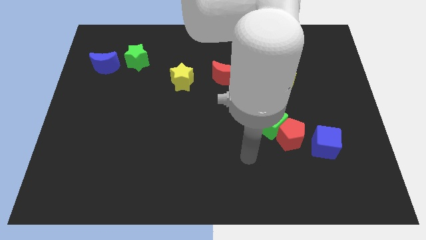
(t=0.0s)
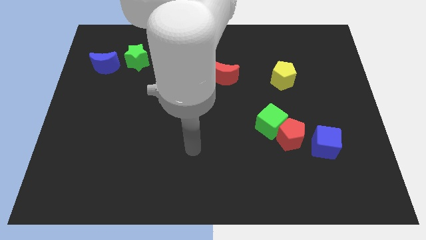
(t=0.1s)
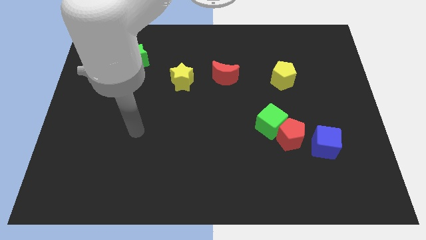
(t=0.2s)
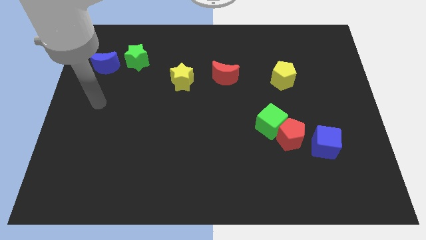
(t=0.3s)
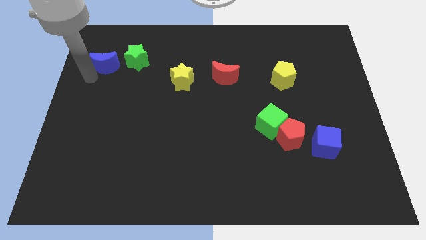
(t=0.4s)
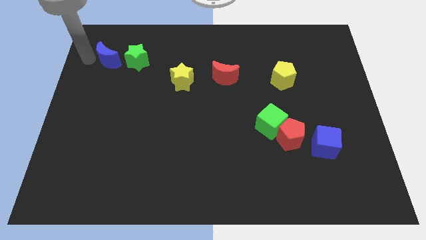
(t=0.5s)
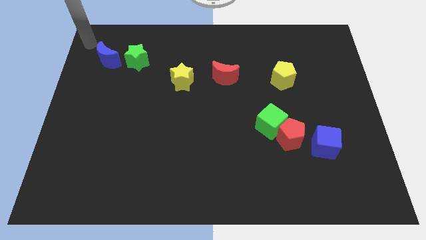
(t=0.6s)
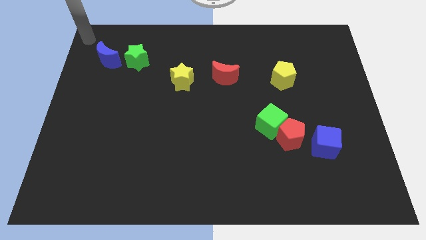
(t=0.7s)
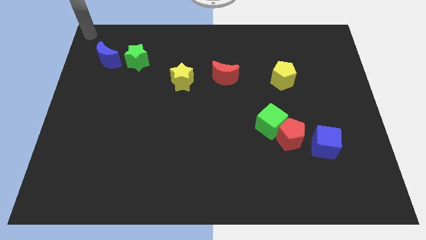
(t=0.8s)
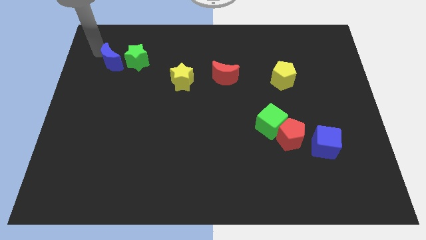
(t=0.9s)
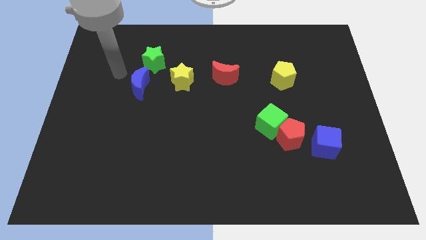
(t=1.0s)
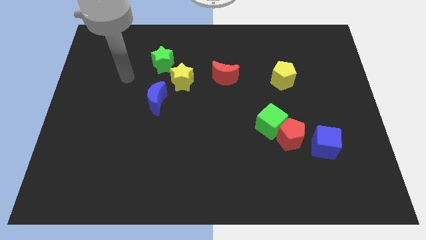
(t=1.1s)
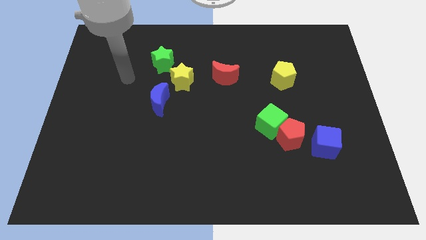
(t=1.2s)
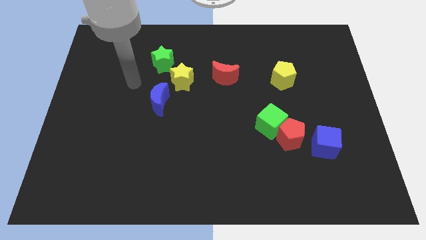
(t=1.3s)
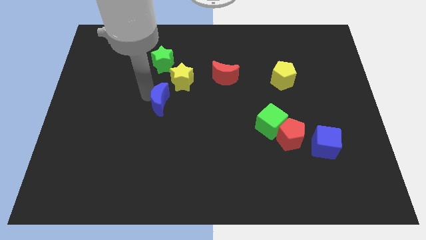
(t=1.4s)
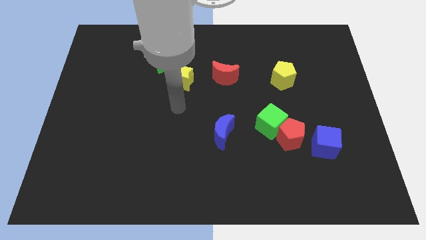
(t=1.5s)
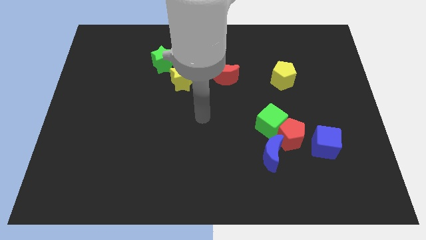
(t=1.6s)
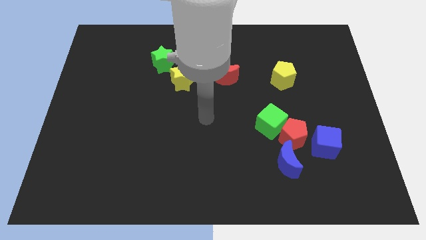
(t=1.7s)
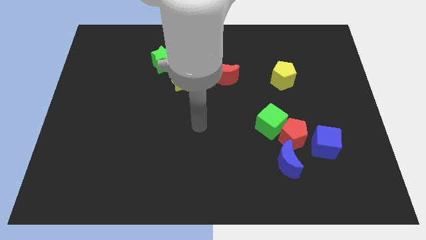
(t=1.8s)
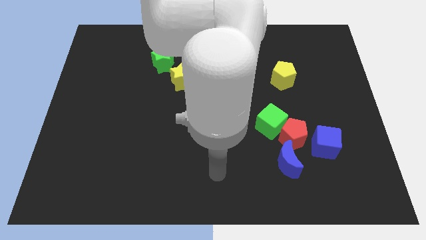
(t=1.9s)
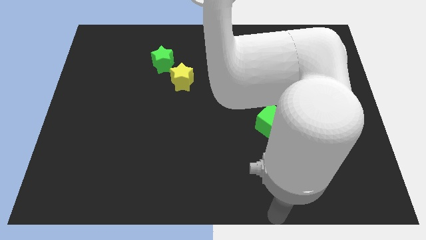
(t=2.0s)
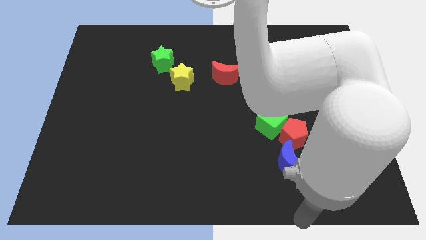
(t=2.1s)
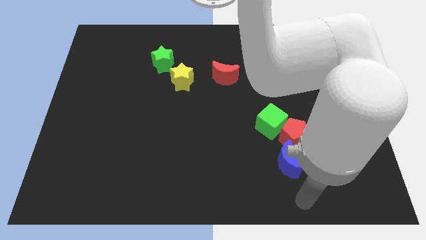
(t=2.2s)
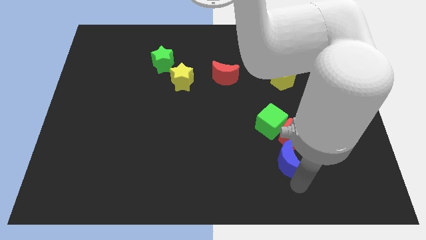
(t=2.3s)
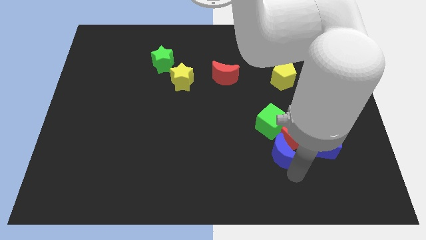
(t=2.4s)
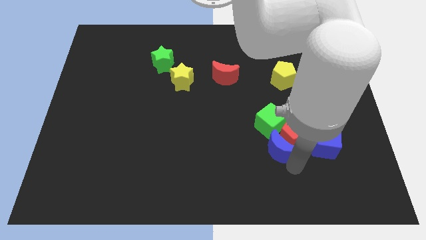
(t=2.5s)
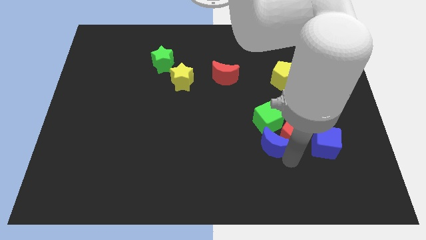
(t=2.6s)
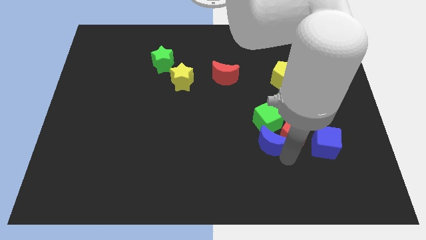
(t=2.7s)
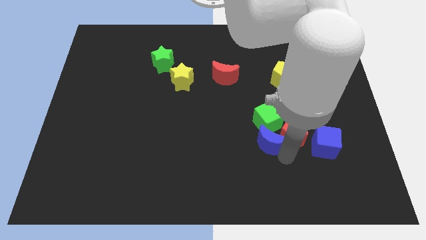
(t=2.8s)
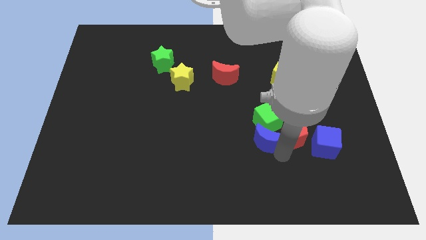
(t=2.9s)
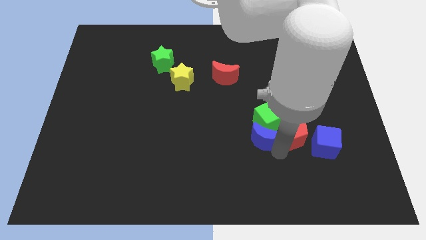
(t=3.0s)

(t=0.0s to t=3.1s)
push the blue moon towards the green cube

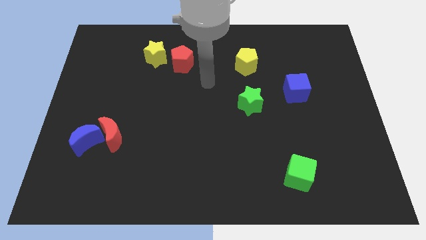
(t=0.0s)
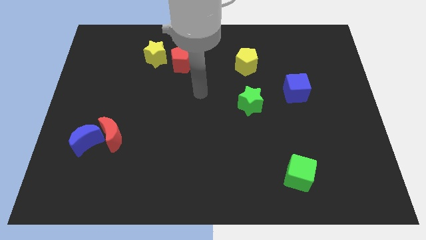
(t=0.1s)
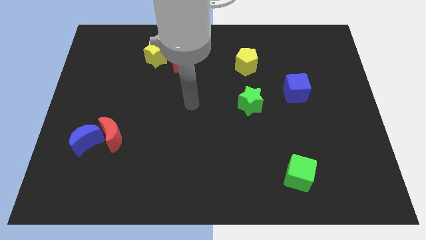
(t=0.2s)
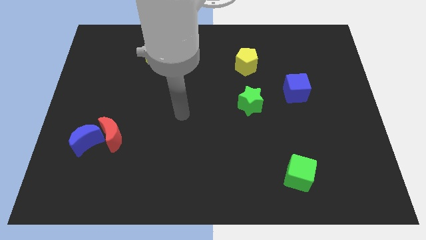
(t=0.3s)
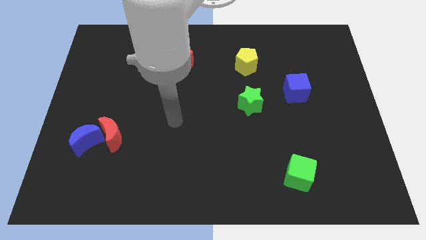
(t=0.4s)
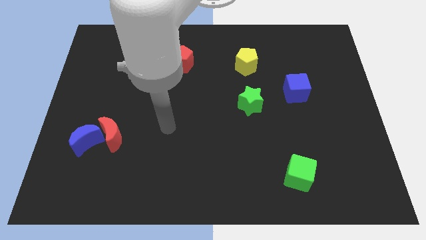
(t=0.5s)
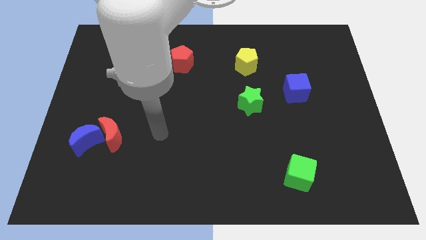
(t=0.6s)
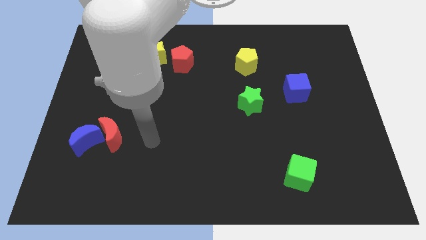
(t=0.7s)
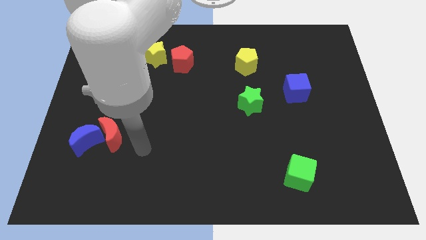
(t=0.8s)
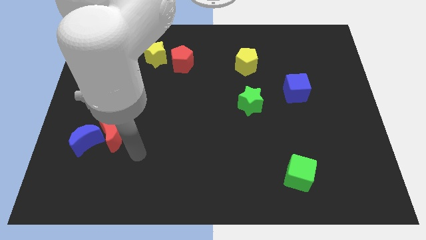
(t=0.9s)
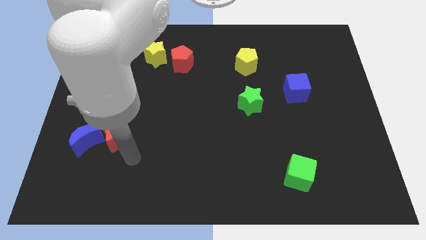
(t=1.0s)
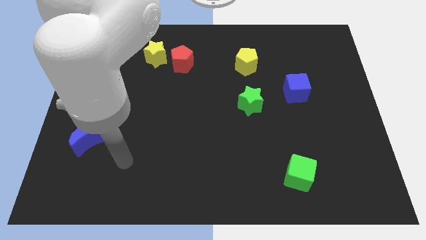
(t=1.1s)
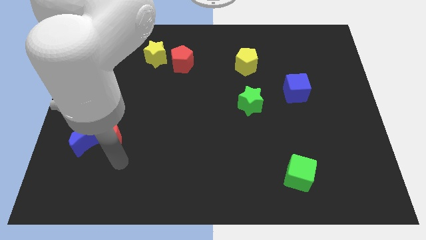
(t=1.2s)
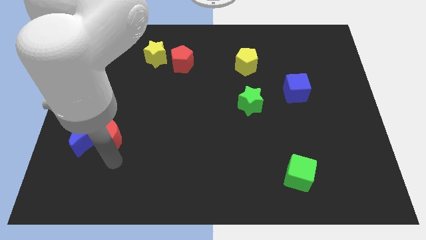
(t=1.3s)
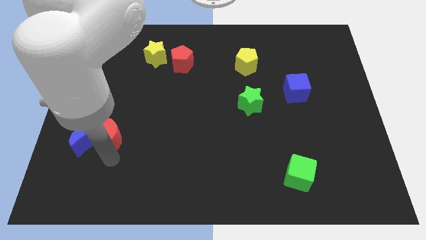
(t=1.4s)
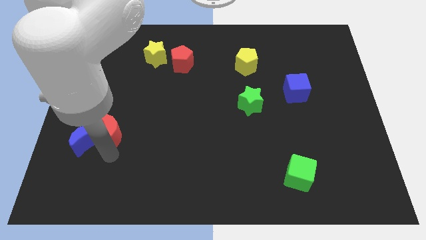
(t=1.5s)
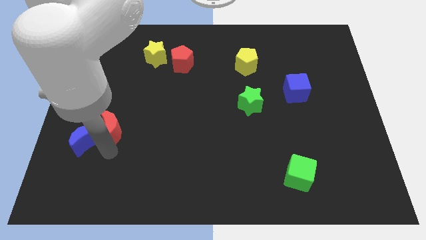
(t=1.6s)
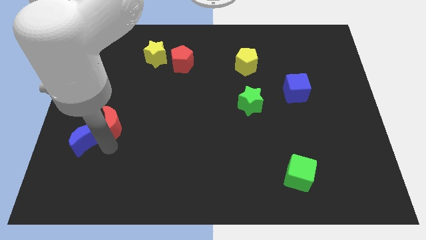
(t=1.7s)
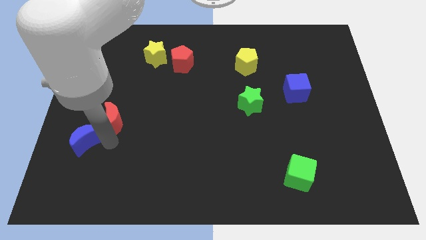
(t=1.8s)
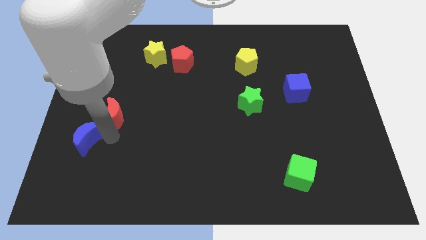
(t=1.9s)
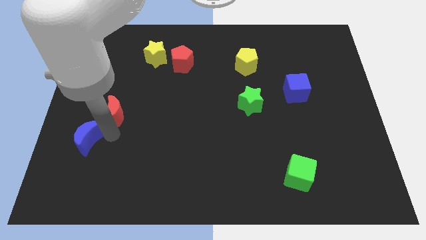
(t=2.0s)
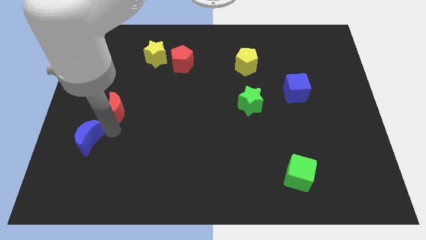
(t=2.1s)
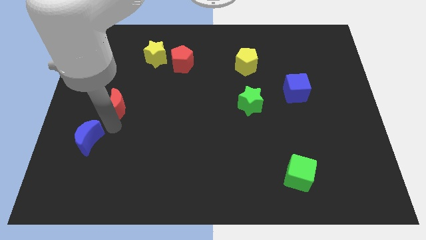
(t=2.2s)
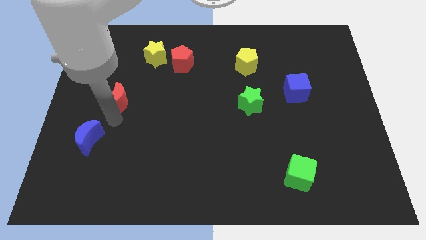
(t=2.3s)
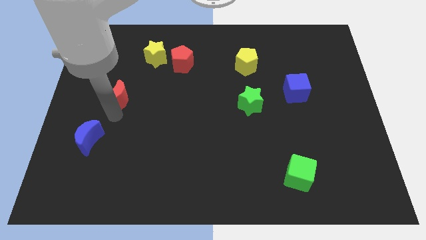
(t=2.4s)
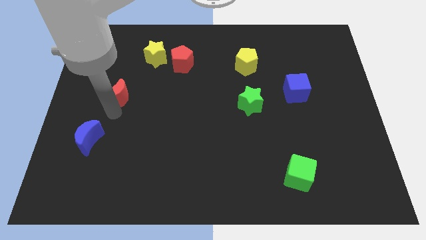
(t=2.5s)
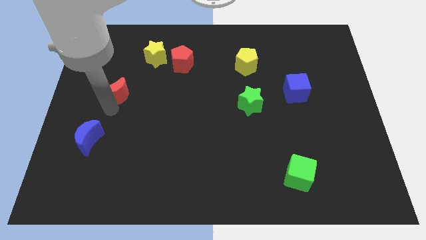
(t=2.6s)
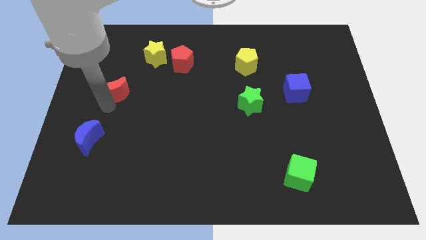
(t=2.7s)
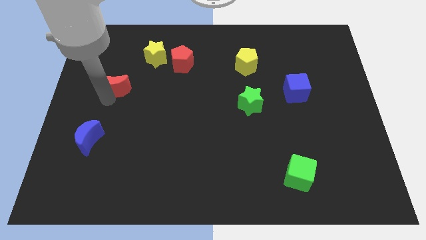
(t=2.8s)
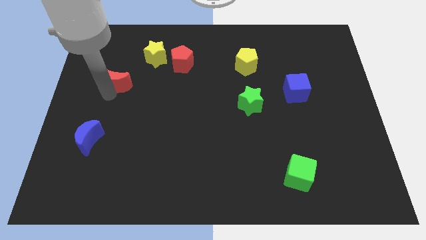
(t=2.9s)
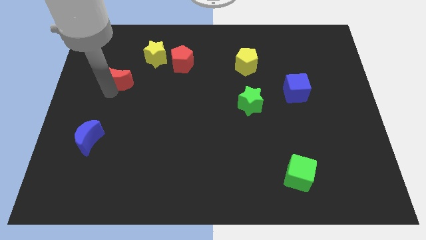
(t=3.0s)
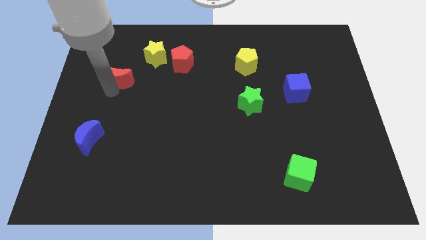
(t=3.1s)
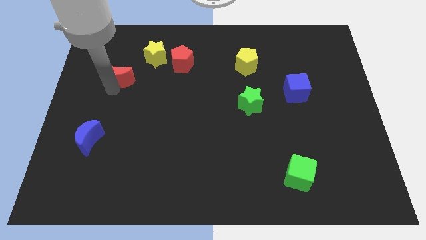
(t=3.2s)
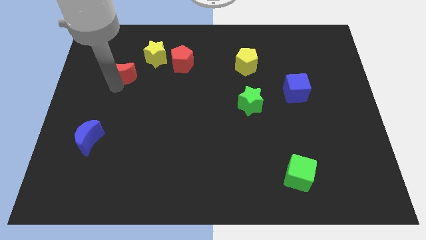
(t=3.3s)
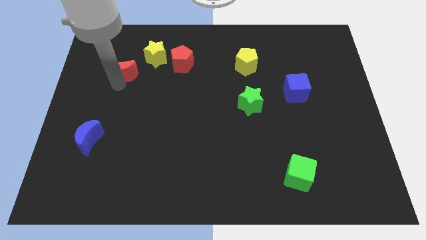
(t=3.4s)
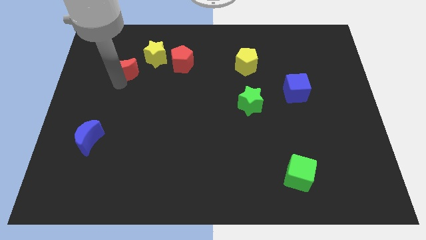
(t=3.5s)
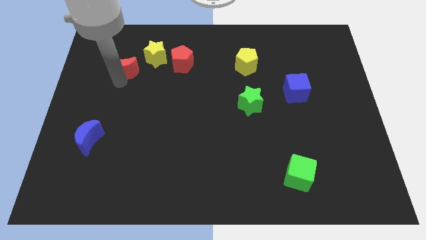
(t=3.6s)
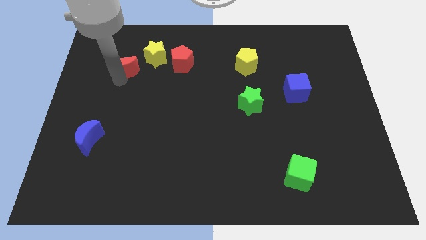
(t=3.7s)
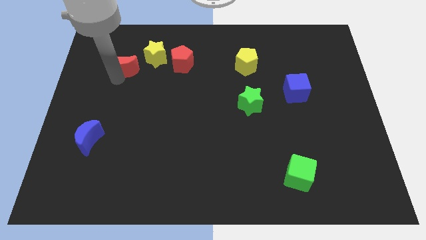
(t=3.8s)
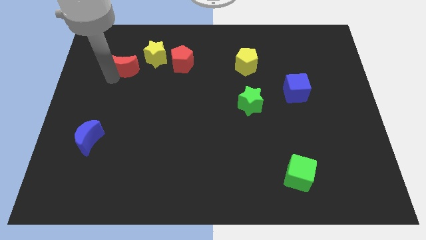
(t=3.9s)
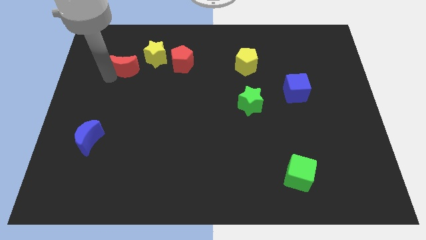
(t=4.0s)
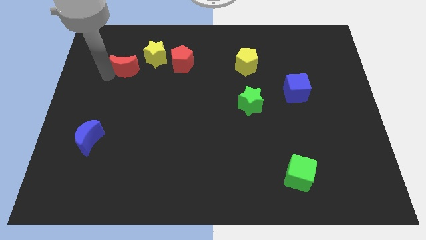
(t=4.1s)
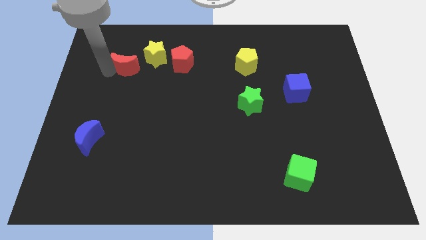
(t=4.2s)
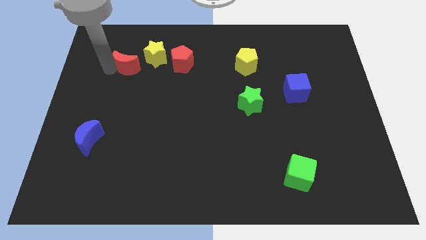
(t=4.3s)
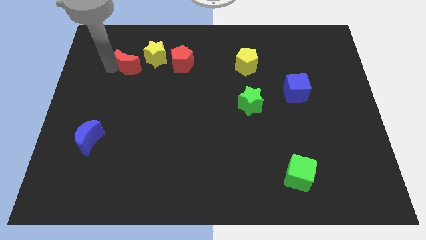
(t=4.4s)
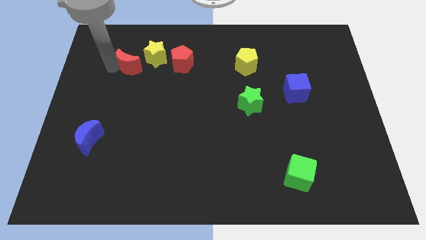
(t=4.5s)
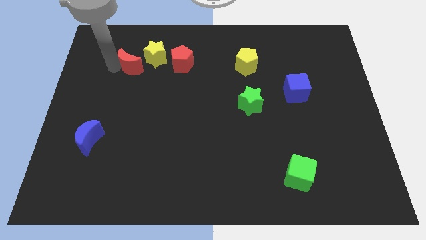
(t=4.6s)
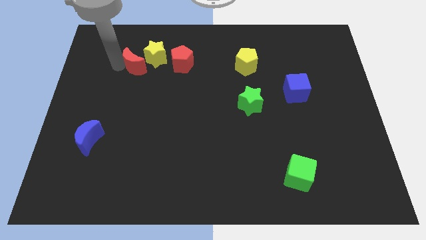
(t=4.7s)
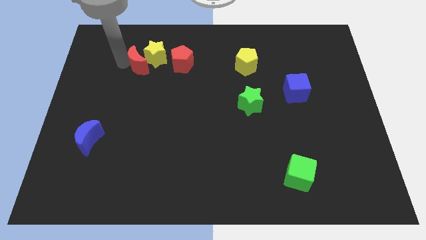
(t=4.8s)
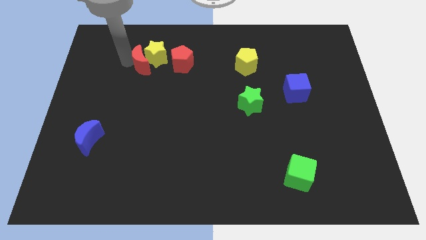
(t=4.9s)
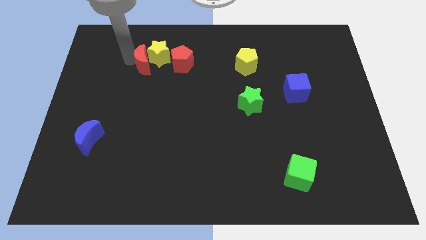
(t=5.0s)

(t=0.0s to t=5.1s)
slide the red moon towards the yellow star
